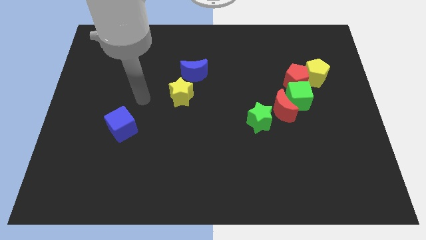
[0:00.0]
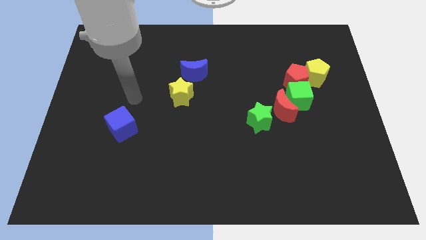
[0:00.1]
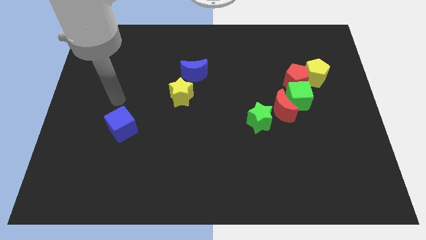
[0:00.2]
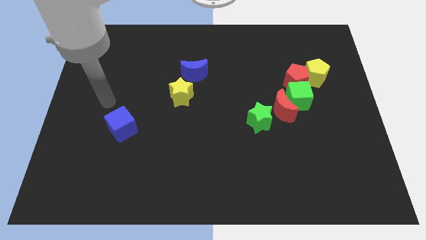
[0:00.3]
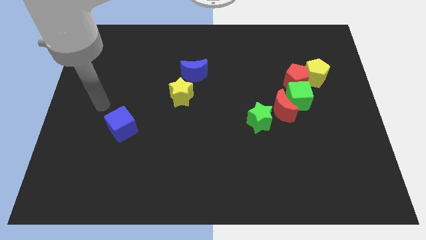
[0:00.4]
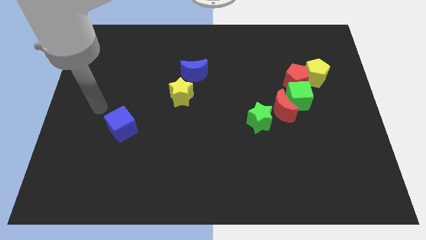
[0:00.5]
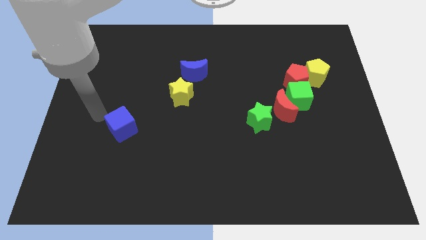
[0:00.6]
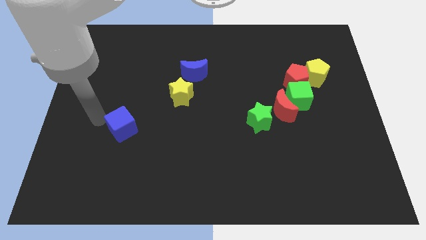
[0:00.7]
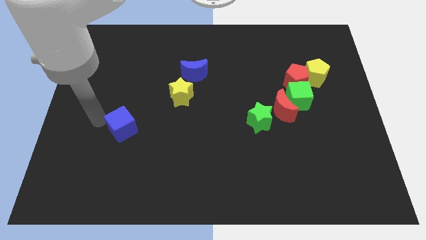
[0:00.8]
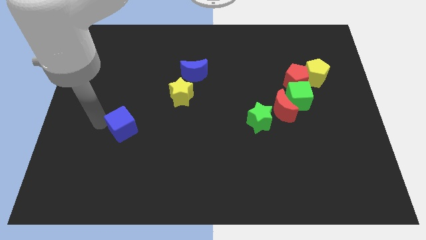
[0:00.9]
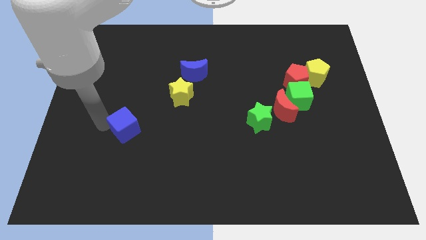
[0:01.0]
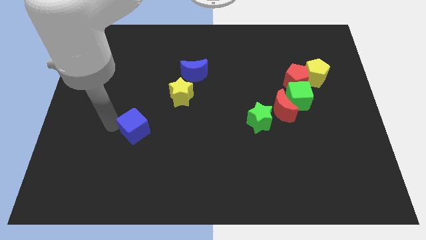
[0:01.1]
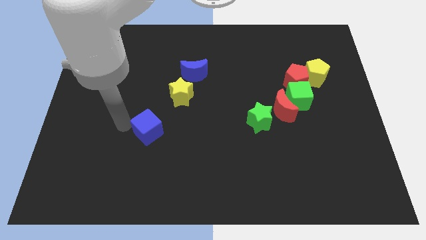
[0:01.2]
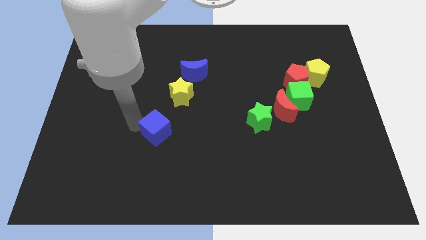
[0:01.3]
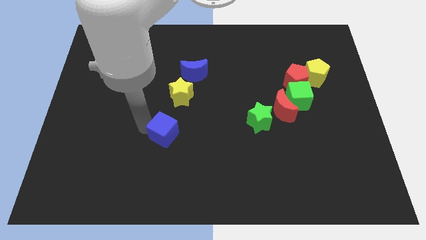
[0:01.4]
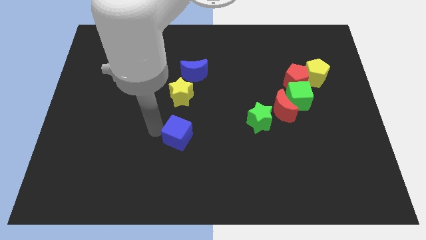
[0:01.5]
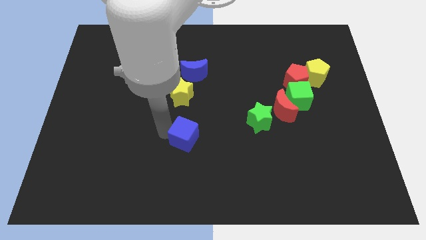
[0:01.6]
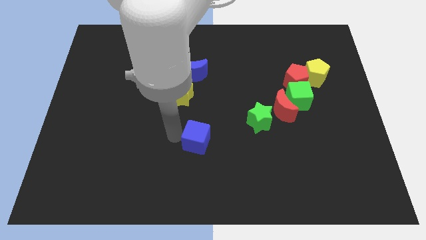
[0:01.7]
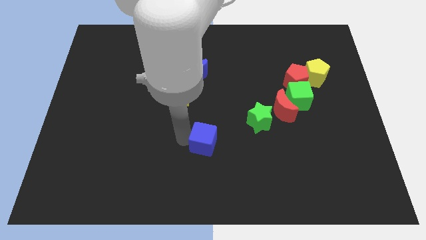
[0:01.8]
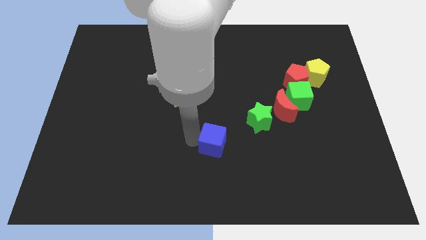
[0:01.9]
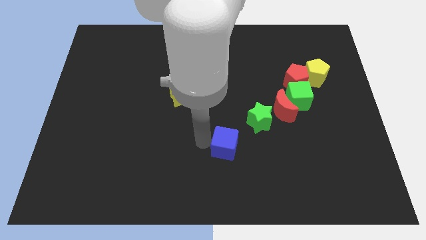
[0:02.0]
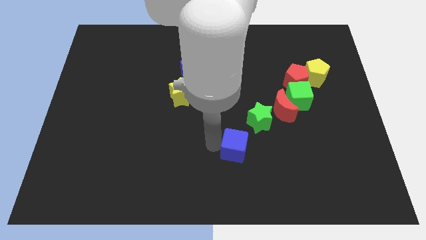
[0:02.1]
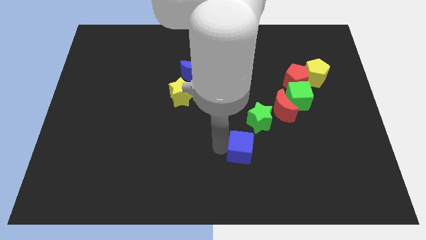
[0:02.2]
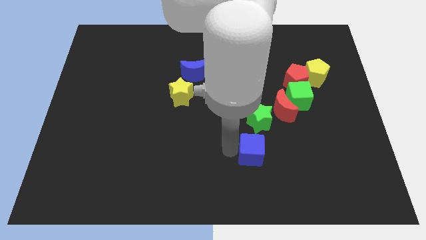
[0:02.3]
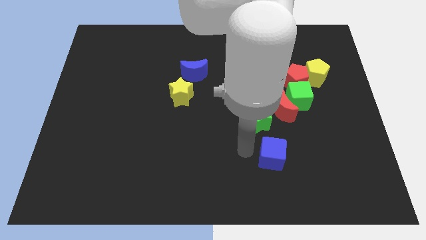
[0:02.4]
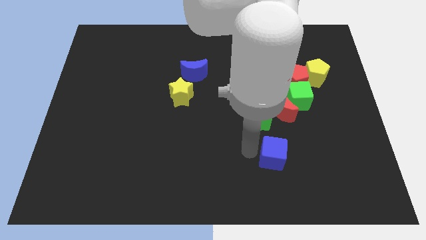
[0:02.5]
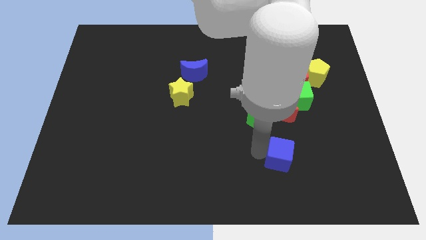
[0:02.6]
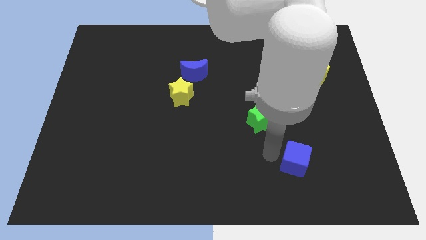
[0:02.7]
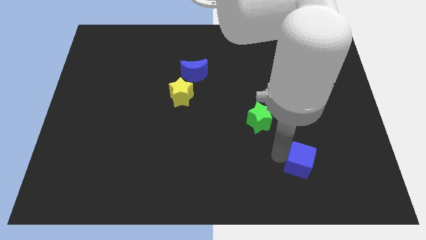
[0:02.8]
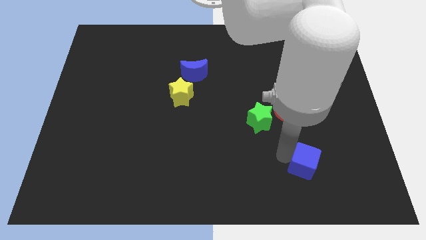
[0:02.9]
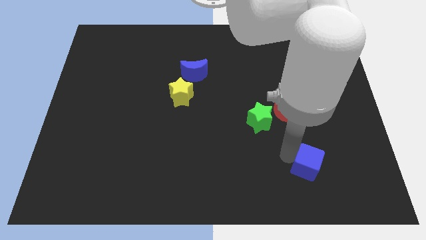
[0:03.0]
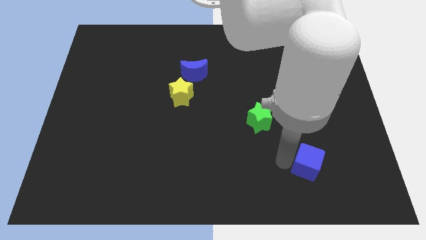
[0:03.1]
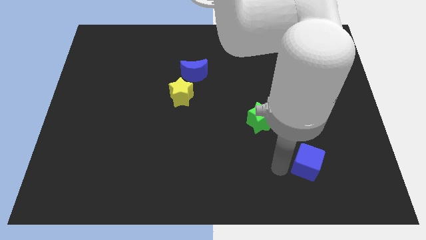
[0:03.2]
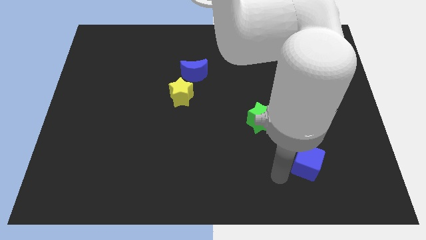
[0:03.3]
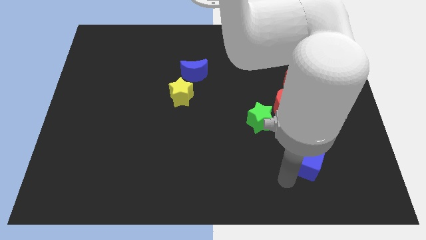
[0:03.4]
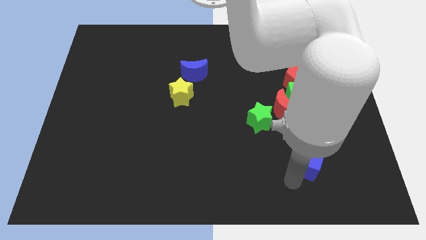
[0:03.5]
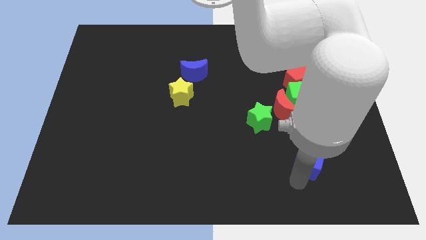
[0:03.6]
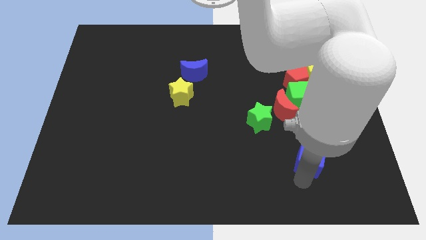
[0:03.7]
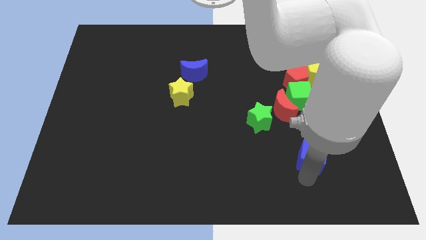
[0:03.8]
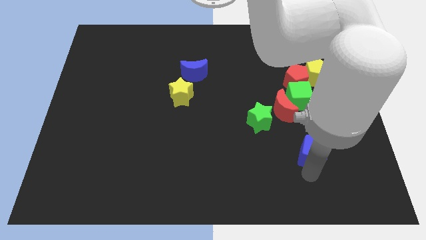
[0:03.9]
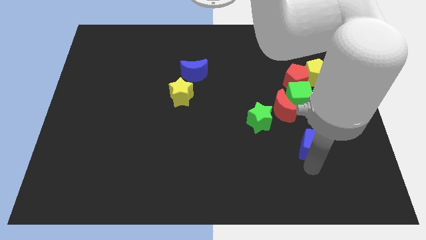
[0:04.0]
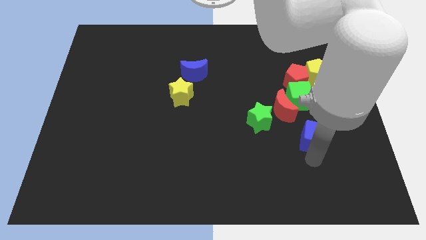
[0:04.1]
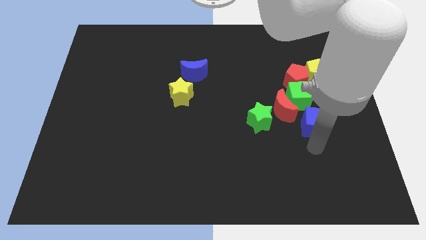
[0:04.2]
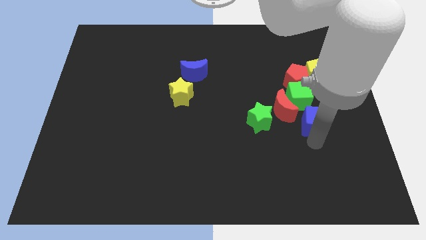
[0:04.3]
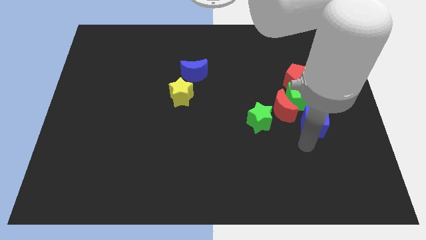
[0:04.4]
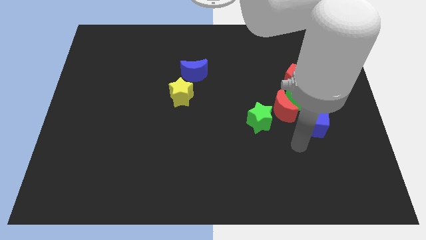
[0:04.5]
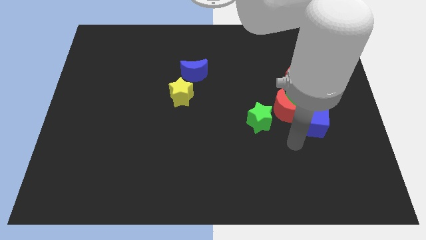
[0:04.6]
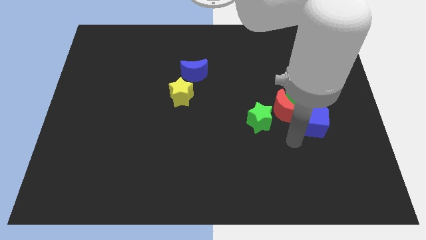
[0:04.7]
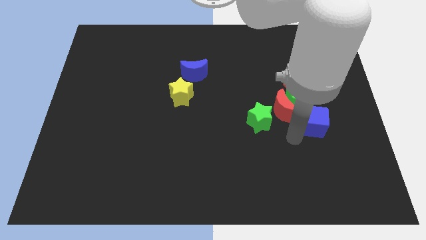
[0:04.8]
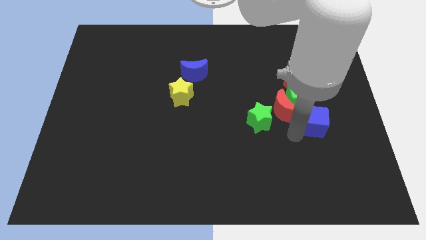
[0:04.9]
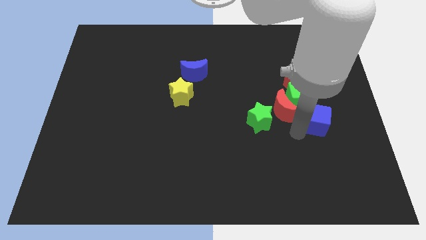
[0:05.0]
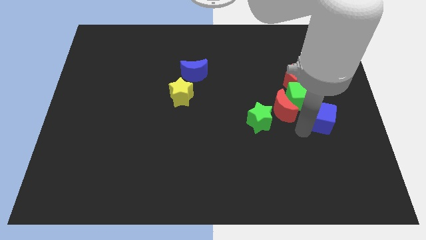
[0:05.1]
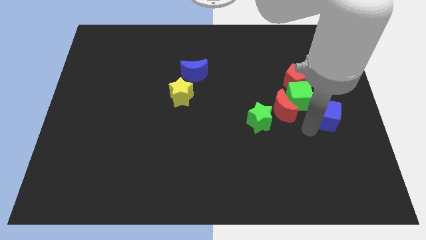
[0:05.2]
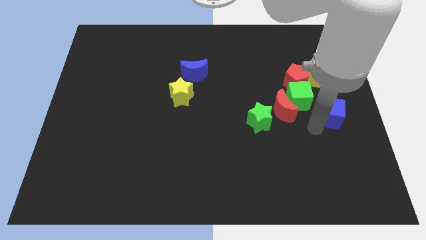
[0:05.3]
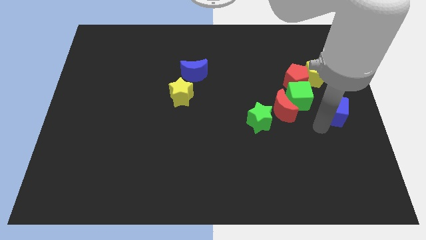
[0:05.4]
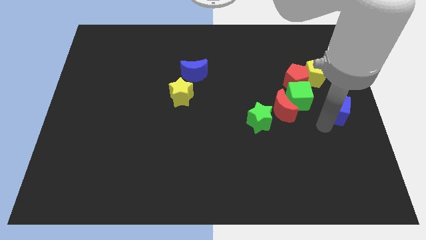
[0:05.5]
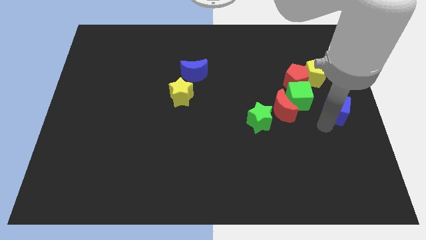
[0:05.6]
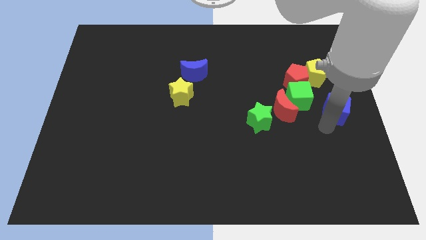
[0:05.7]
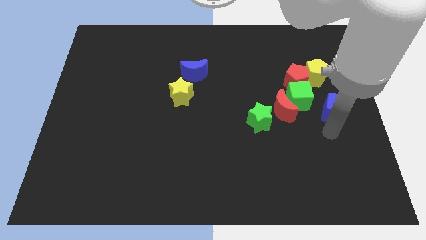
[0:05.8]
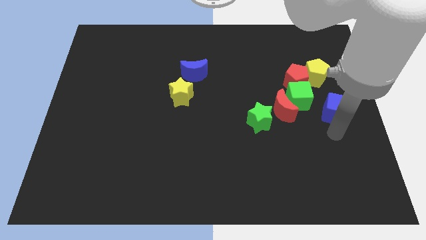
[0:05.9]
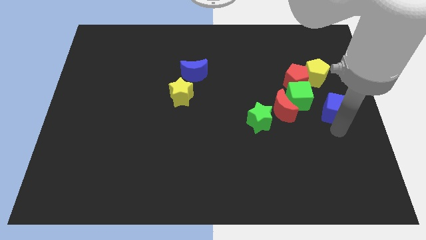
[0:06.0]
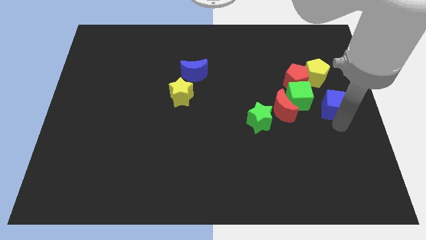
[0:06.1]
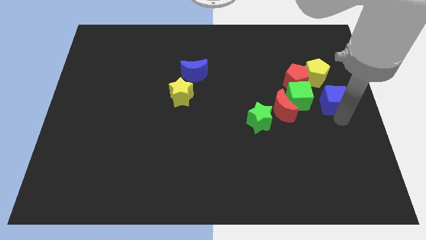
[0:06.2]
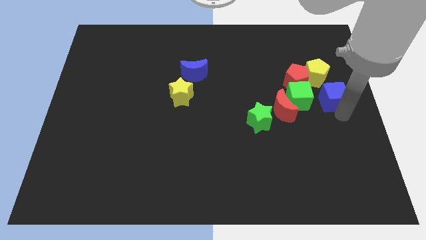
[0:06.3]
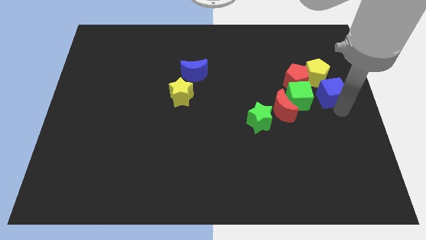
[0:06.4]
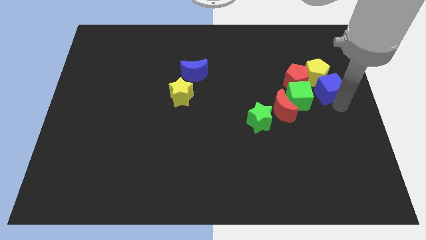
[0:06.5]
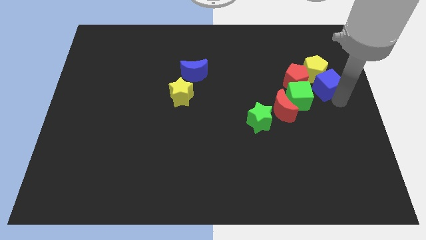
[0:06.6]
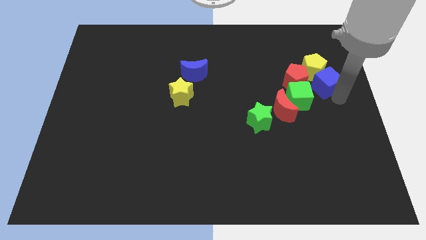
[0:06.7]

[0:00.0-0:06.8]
push the blue cube to the yellow pentagon

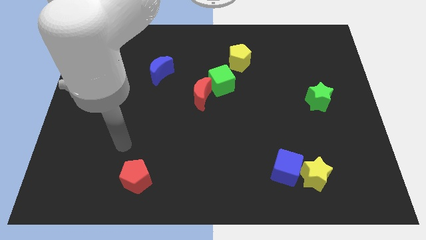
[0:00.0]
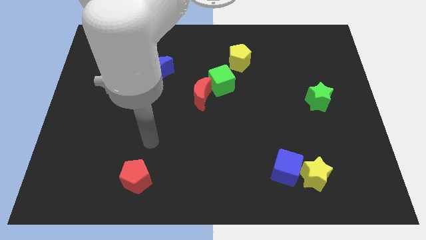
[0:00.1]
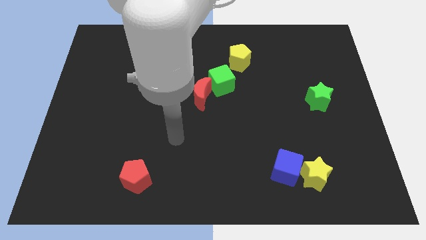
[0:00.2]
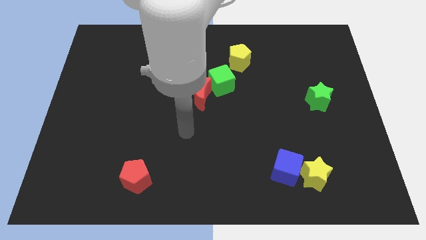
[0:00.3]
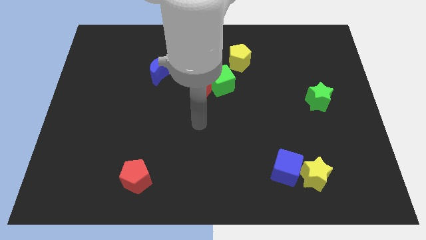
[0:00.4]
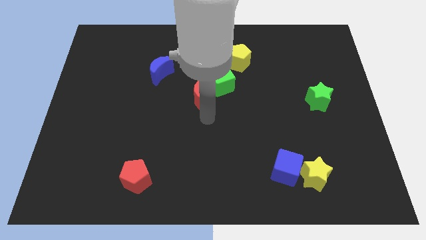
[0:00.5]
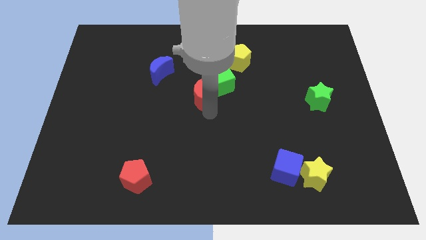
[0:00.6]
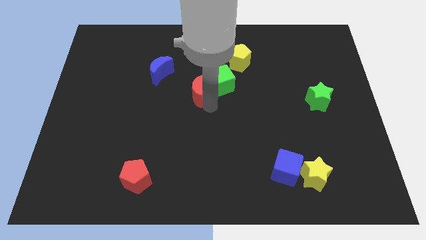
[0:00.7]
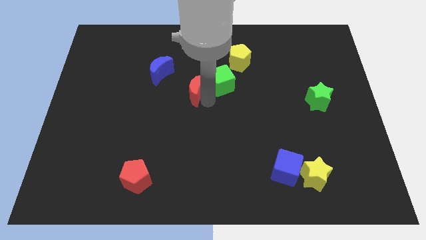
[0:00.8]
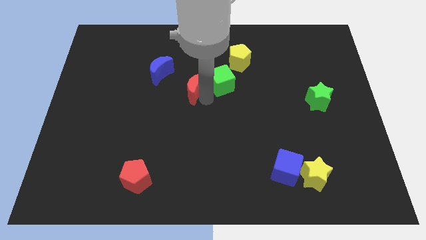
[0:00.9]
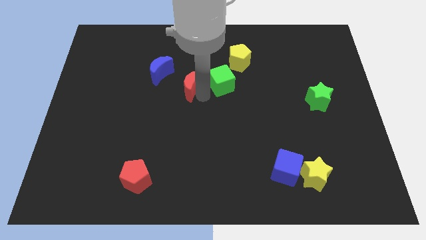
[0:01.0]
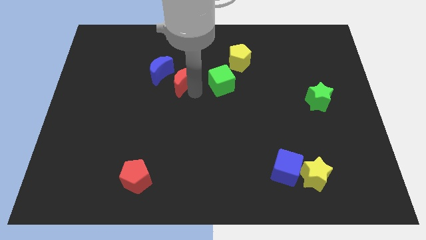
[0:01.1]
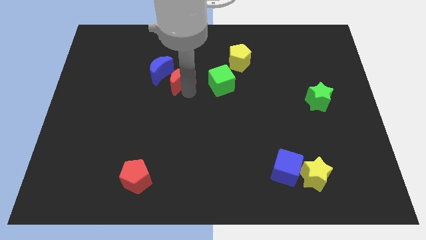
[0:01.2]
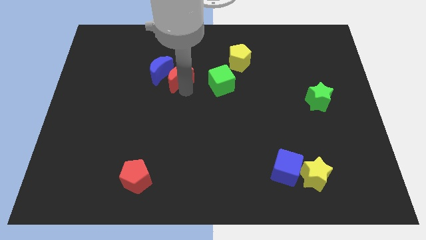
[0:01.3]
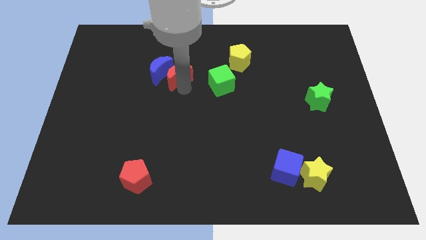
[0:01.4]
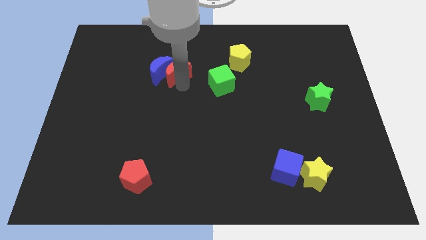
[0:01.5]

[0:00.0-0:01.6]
move the red moon close to the blue moon

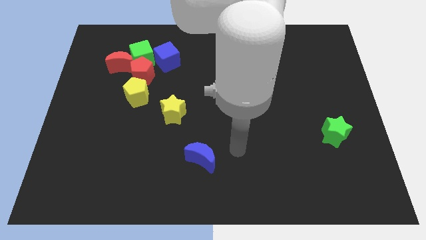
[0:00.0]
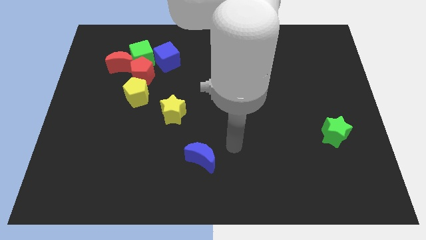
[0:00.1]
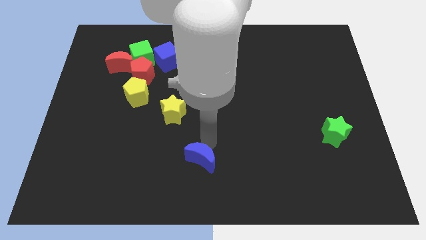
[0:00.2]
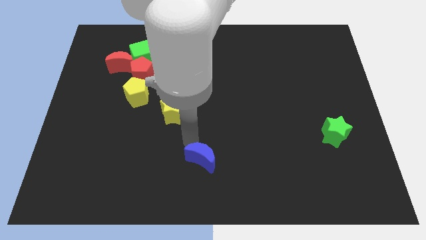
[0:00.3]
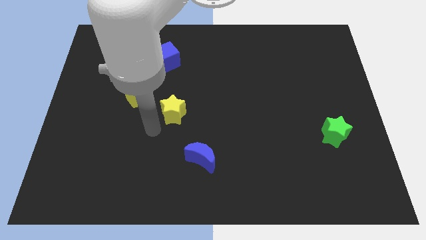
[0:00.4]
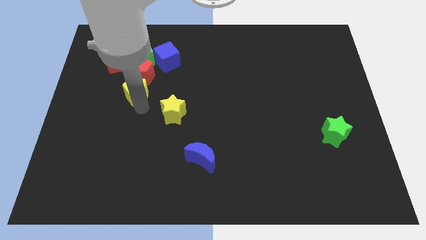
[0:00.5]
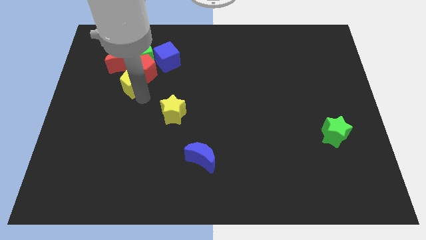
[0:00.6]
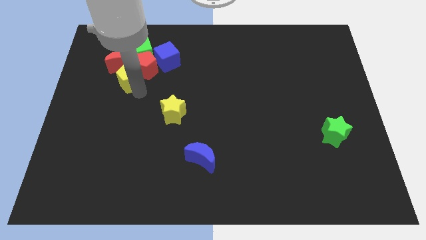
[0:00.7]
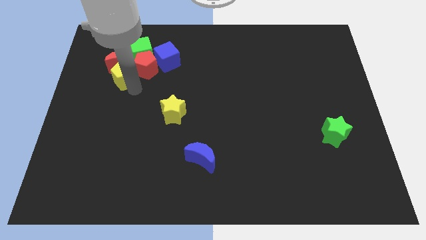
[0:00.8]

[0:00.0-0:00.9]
push the yellow pentagon next to the red moon
